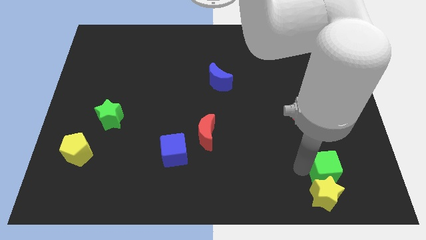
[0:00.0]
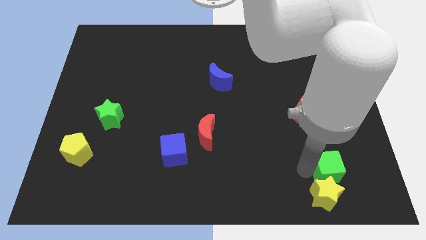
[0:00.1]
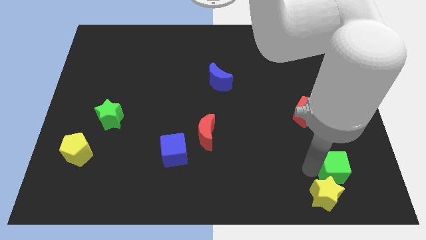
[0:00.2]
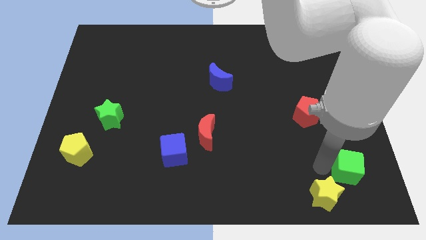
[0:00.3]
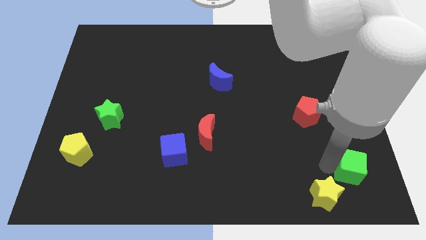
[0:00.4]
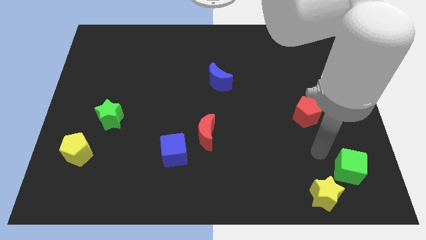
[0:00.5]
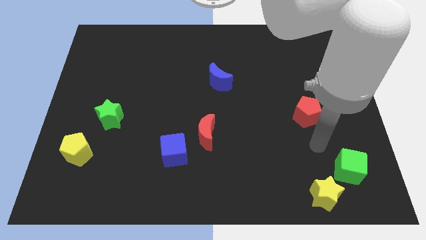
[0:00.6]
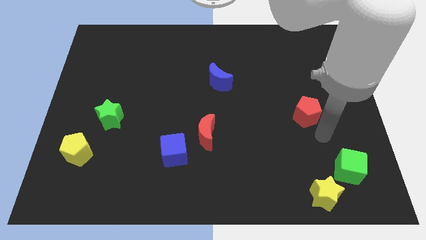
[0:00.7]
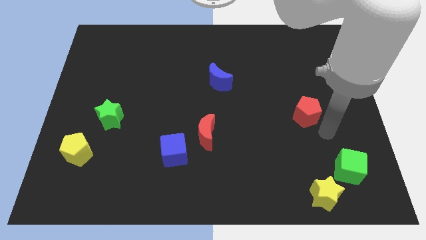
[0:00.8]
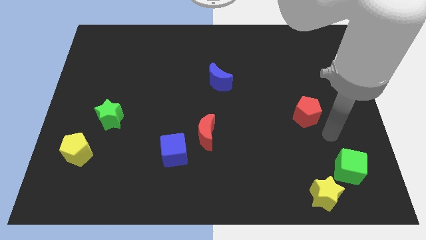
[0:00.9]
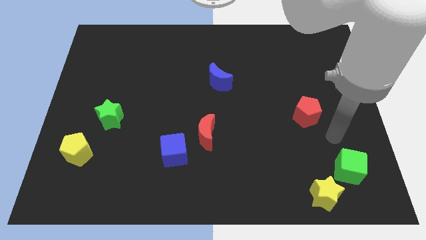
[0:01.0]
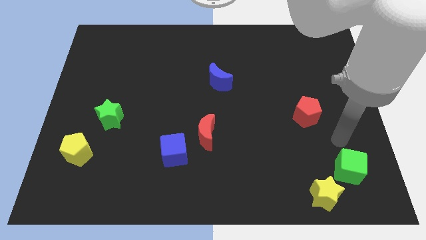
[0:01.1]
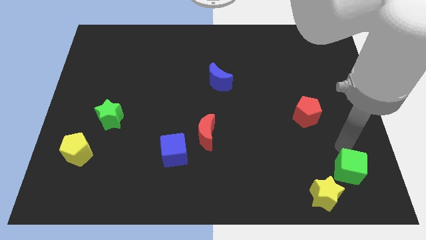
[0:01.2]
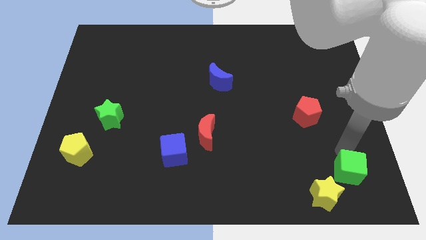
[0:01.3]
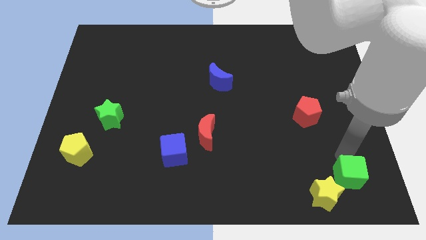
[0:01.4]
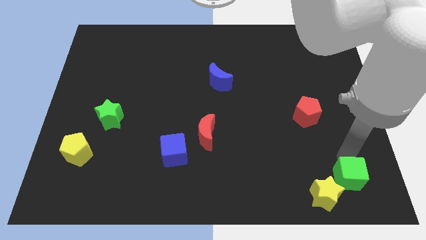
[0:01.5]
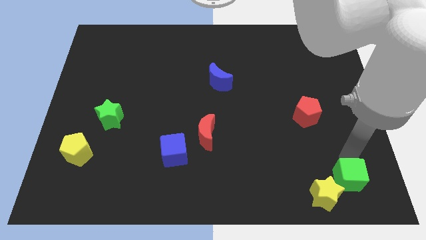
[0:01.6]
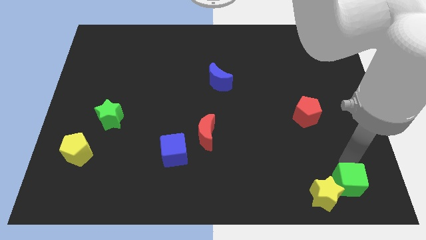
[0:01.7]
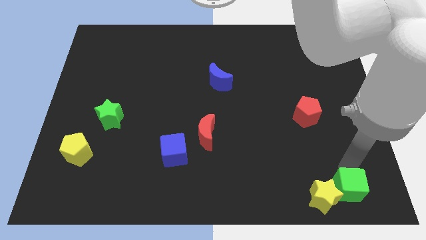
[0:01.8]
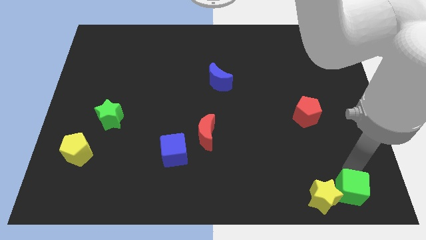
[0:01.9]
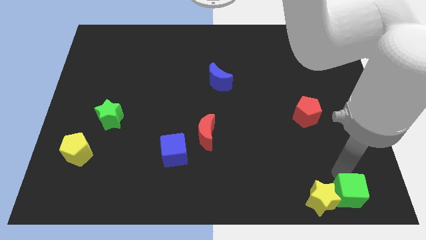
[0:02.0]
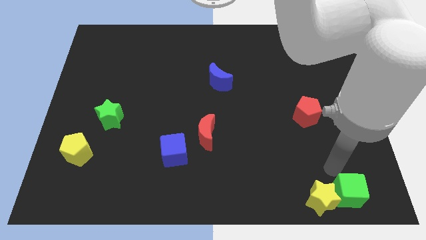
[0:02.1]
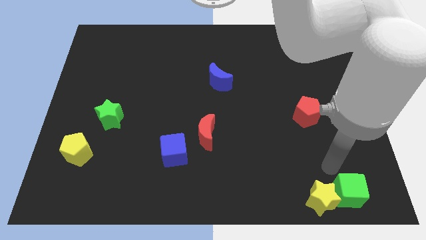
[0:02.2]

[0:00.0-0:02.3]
move the green cube to the right of the yellow star

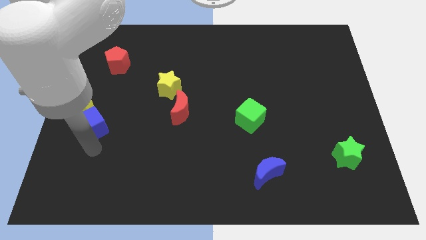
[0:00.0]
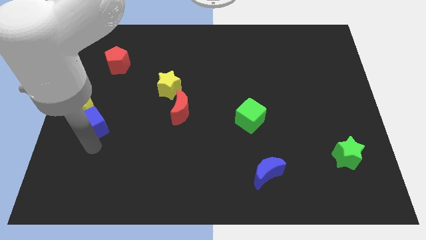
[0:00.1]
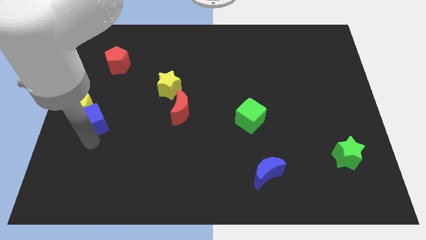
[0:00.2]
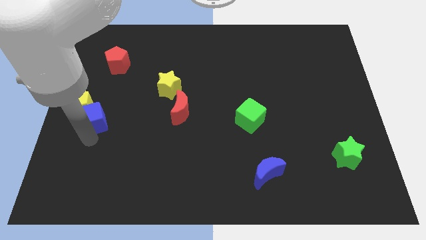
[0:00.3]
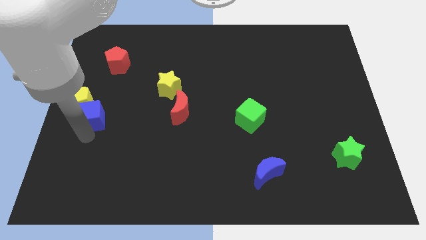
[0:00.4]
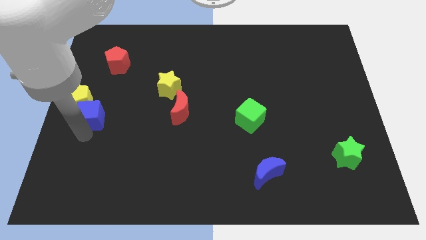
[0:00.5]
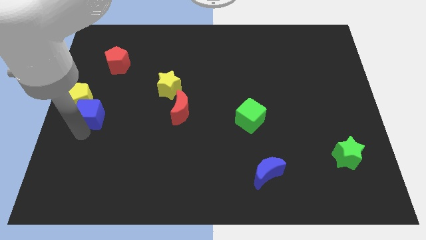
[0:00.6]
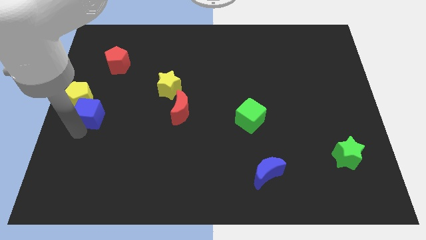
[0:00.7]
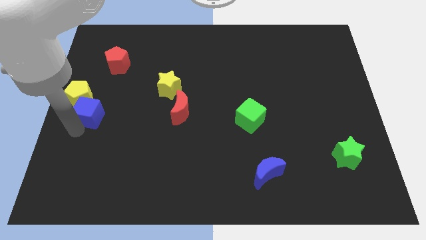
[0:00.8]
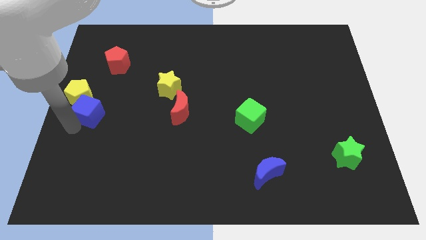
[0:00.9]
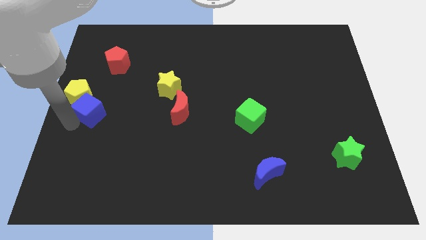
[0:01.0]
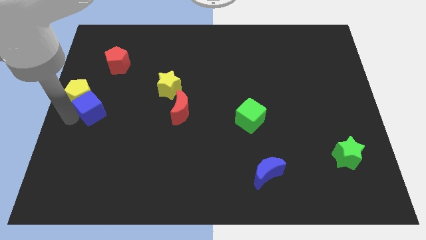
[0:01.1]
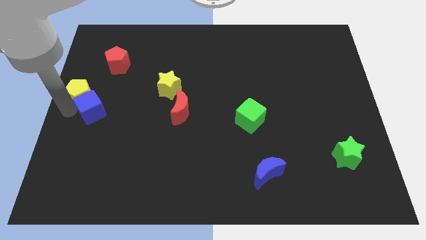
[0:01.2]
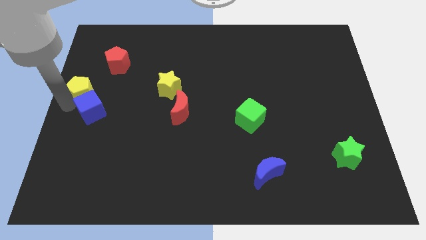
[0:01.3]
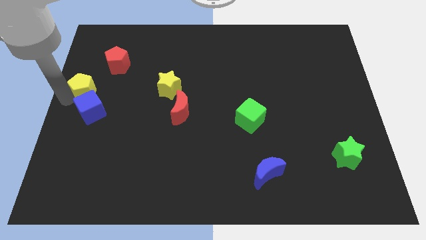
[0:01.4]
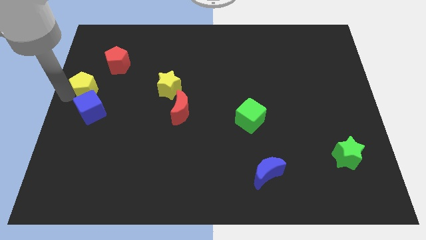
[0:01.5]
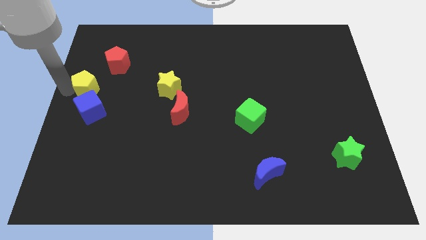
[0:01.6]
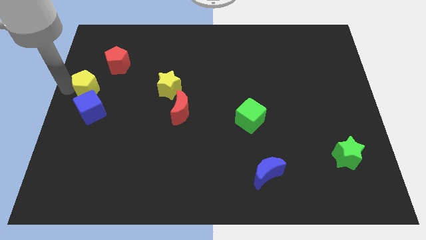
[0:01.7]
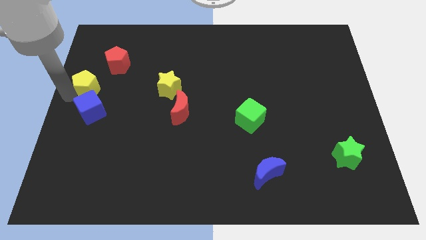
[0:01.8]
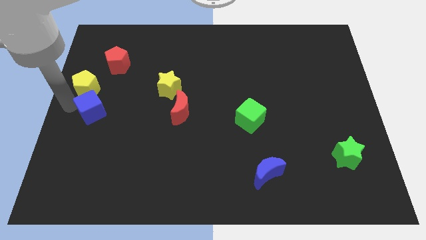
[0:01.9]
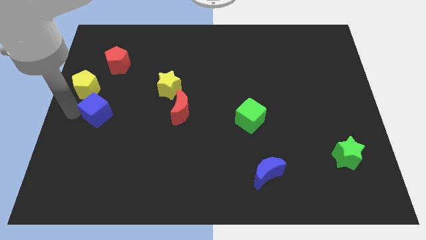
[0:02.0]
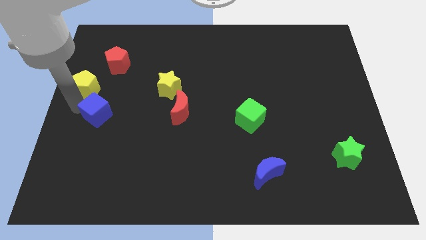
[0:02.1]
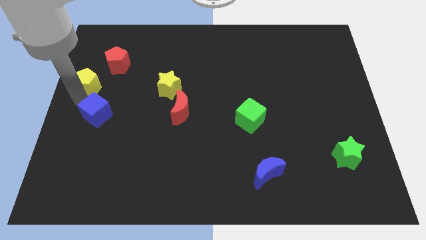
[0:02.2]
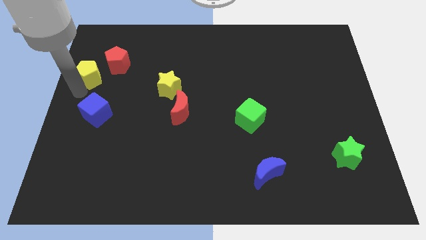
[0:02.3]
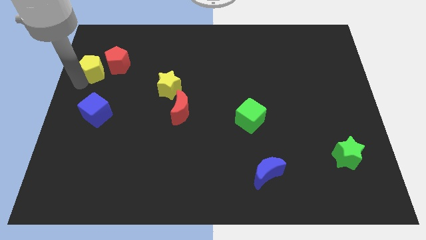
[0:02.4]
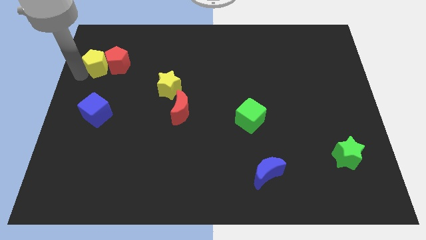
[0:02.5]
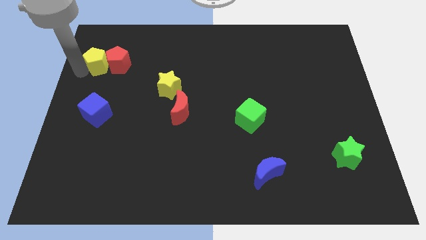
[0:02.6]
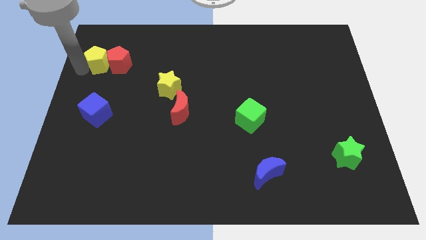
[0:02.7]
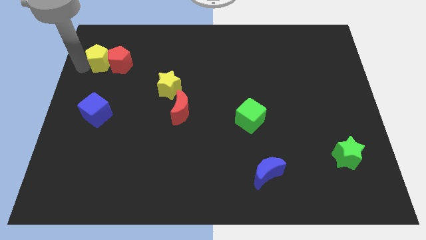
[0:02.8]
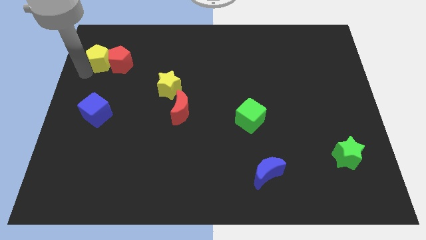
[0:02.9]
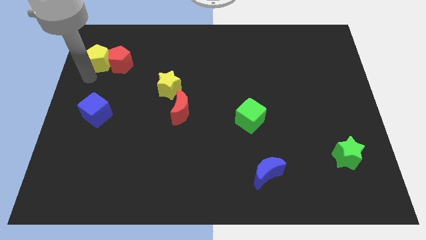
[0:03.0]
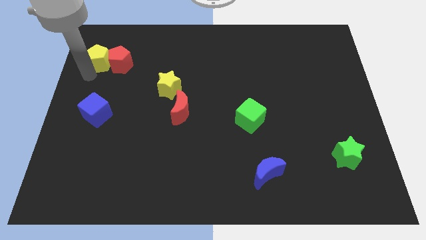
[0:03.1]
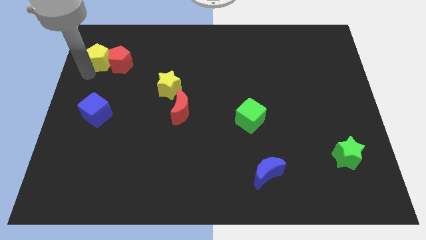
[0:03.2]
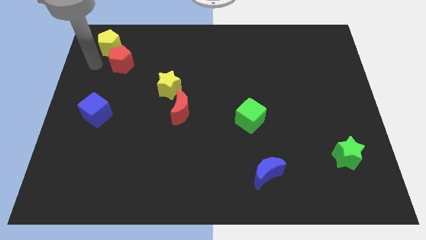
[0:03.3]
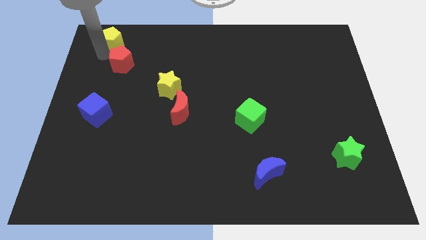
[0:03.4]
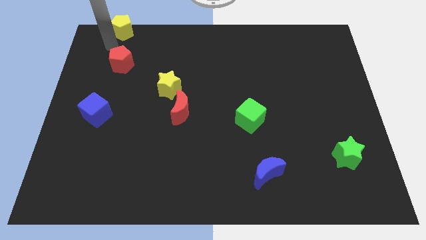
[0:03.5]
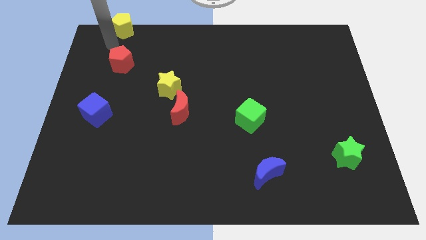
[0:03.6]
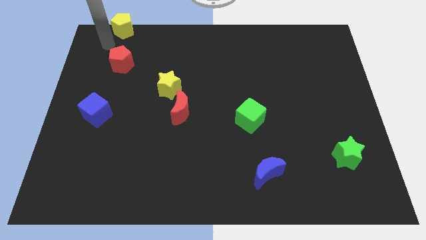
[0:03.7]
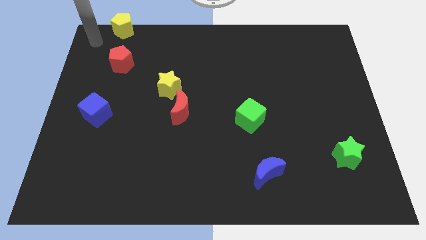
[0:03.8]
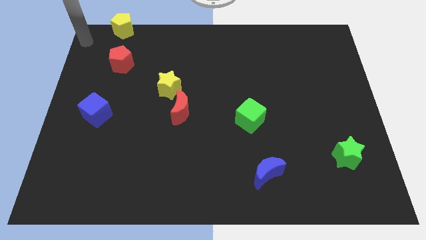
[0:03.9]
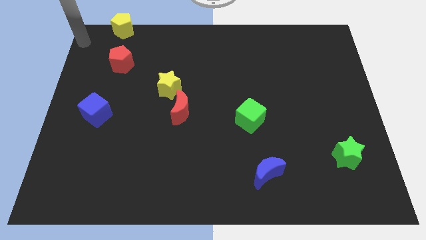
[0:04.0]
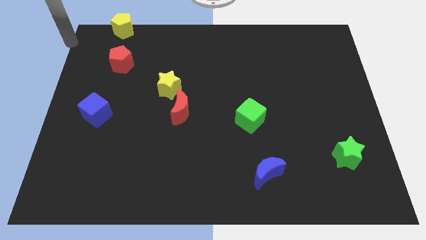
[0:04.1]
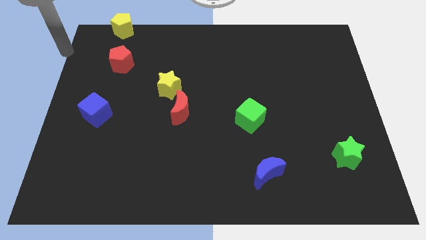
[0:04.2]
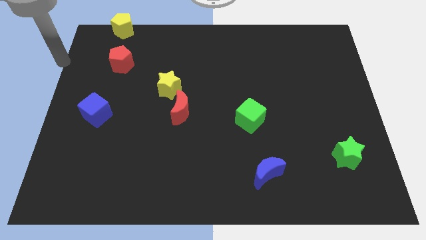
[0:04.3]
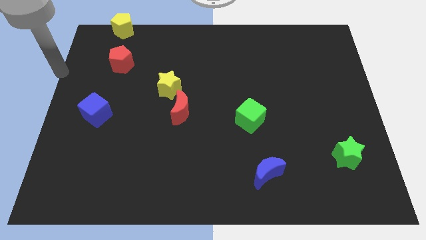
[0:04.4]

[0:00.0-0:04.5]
move yellow pentagon towards the left top of the board

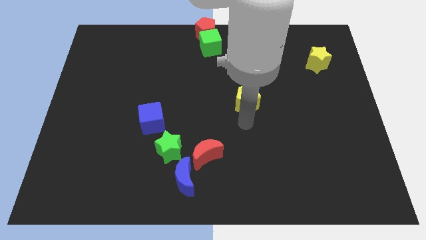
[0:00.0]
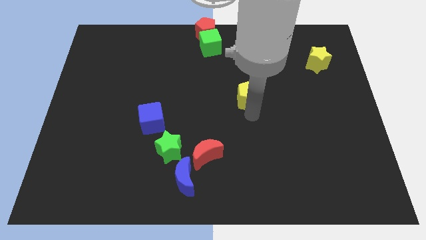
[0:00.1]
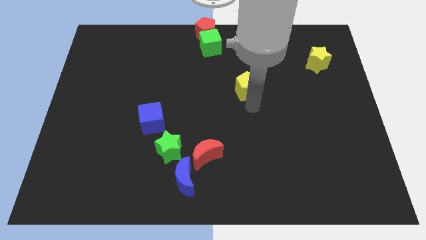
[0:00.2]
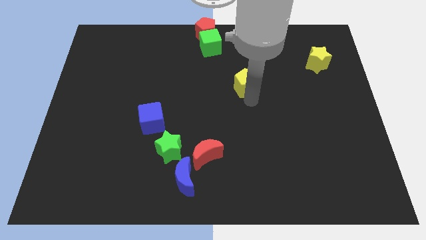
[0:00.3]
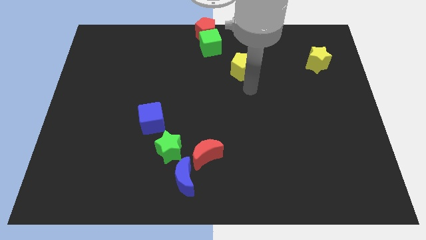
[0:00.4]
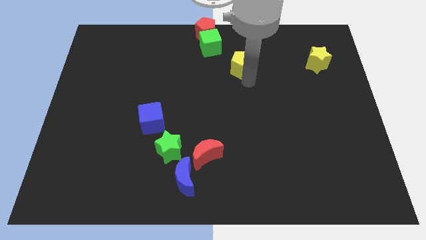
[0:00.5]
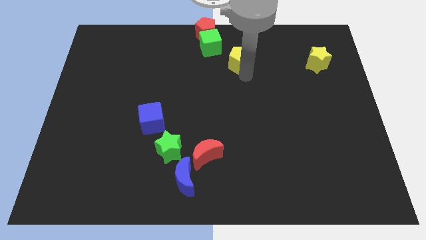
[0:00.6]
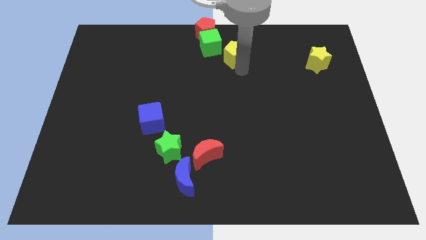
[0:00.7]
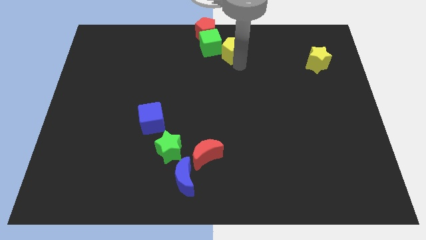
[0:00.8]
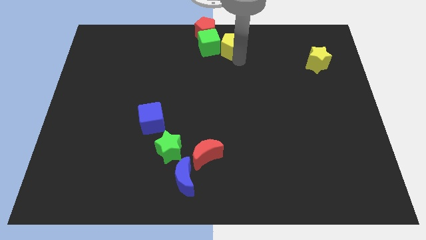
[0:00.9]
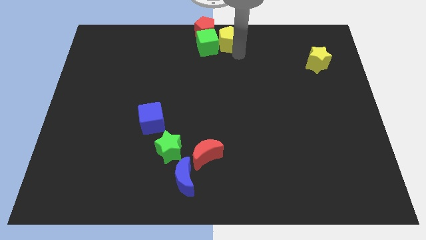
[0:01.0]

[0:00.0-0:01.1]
push the yellow pentagon into the green cube

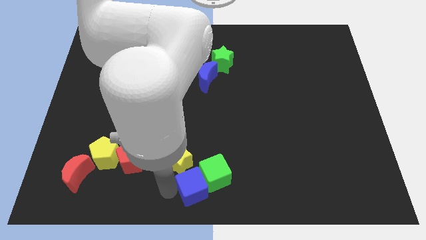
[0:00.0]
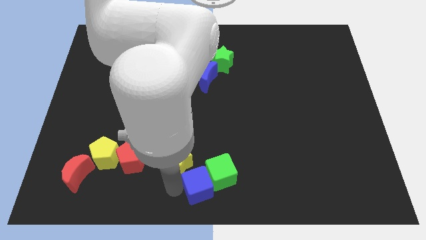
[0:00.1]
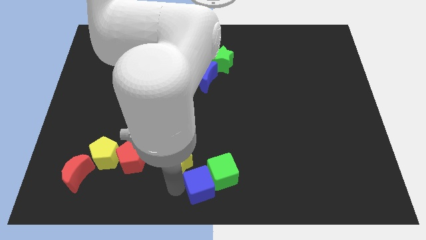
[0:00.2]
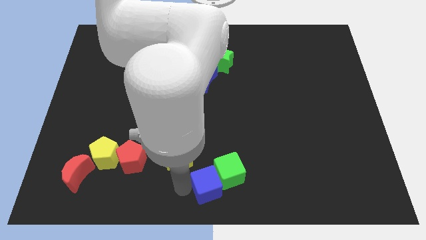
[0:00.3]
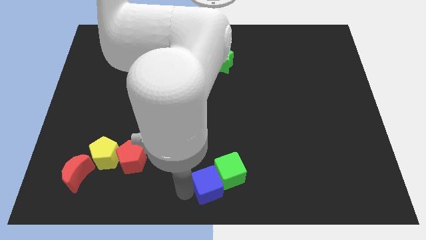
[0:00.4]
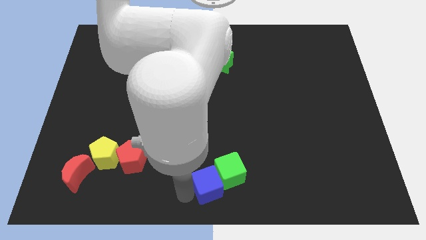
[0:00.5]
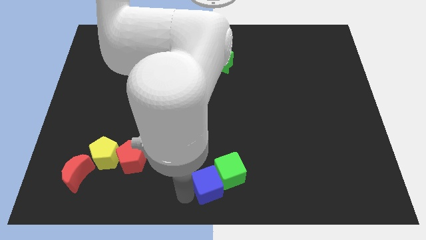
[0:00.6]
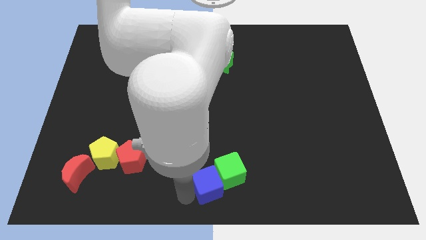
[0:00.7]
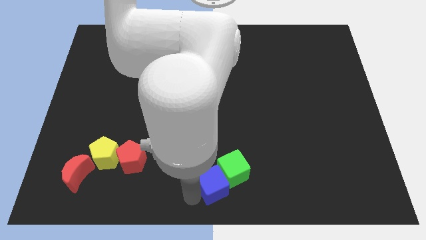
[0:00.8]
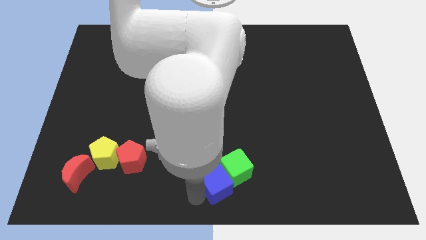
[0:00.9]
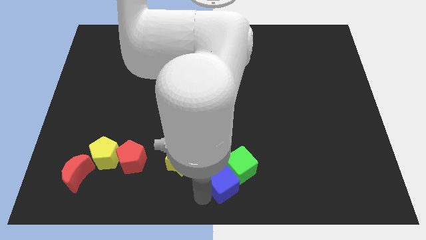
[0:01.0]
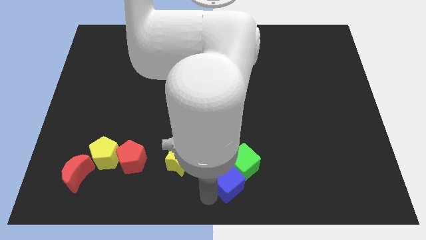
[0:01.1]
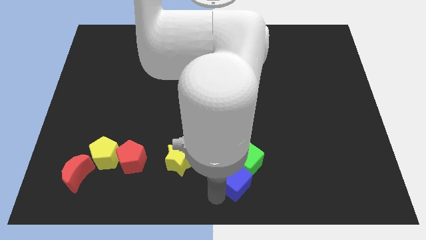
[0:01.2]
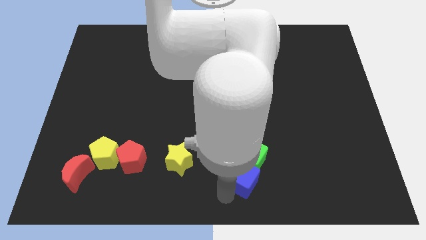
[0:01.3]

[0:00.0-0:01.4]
push the green cube with blue cube slightly upwards
